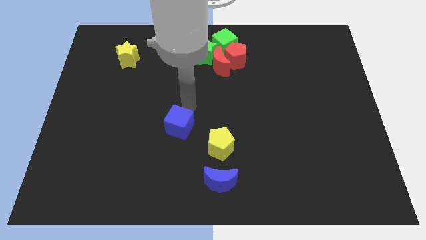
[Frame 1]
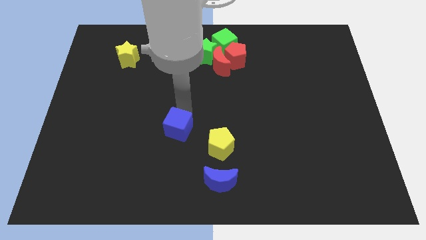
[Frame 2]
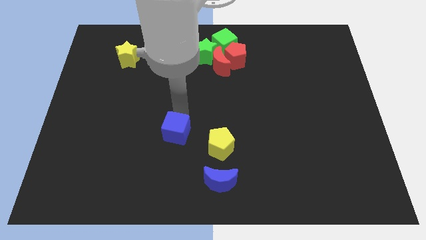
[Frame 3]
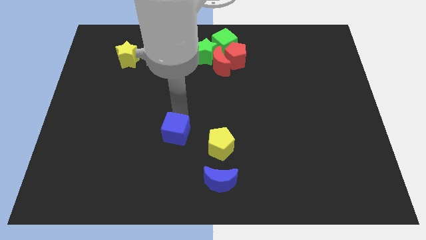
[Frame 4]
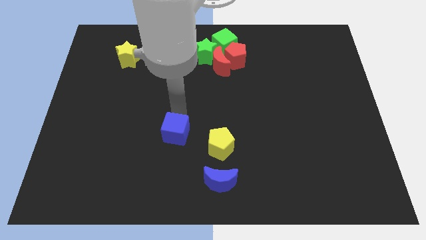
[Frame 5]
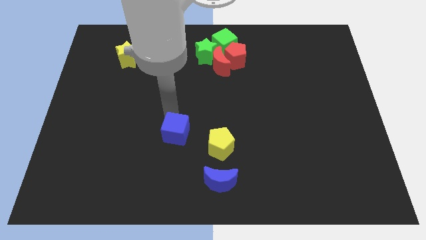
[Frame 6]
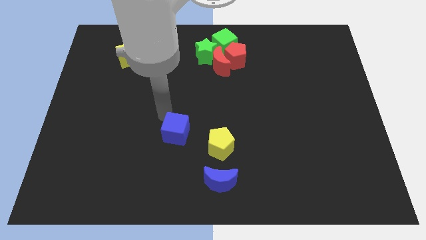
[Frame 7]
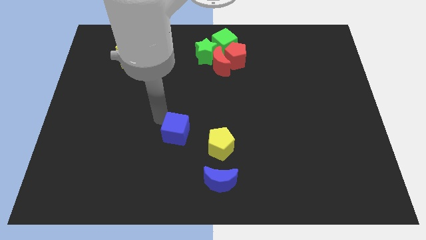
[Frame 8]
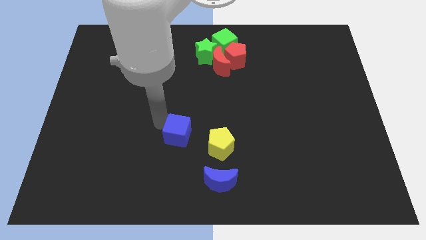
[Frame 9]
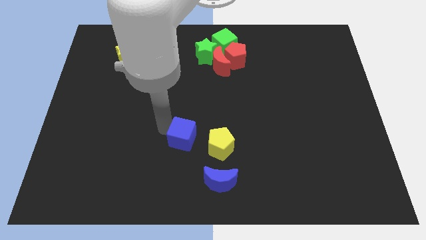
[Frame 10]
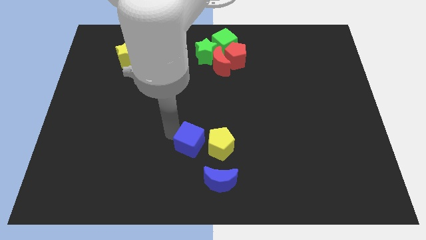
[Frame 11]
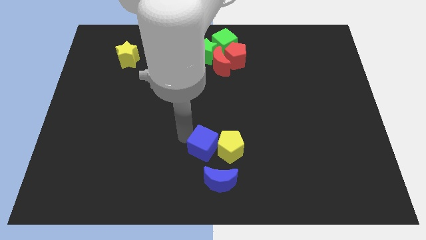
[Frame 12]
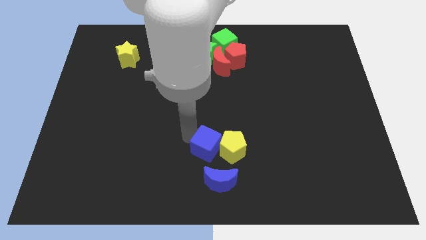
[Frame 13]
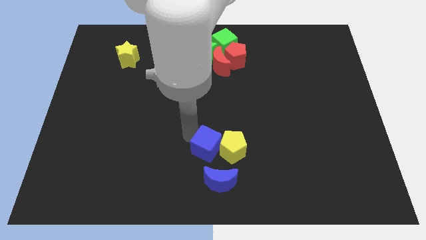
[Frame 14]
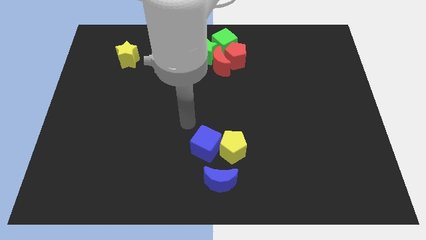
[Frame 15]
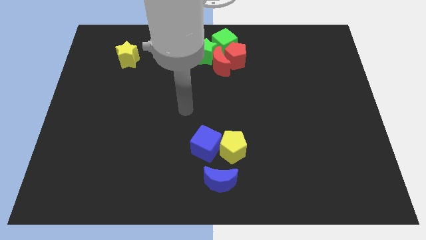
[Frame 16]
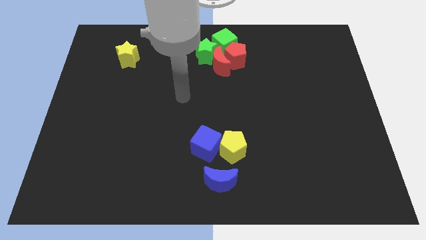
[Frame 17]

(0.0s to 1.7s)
move the blue cube into the yellow pentagon

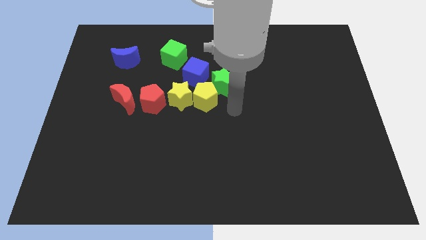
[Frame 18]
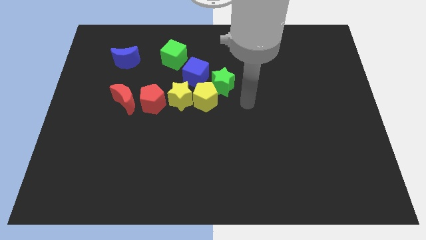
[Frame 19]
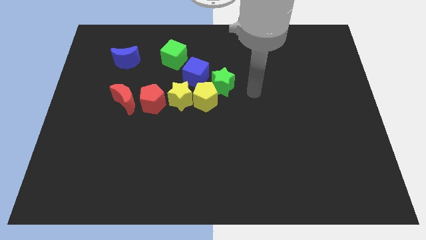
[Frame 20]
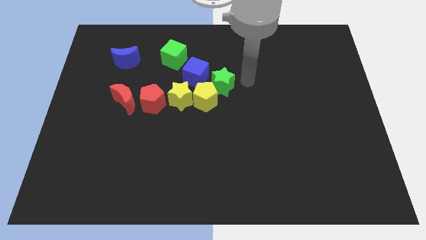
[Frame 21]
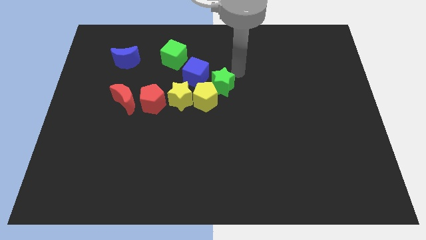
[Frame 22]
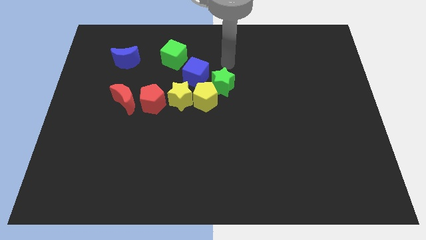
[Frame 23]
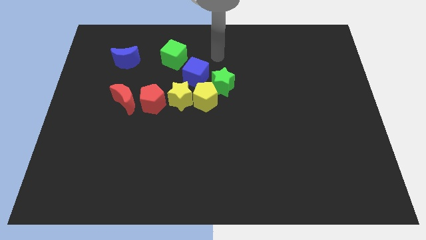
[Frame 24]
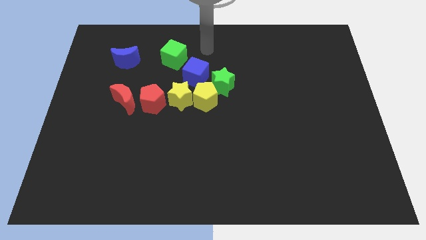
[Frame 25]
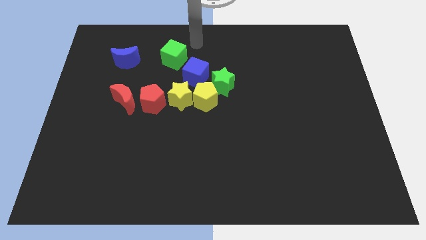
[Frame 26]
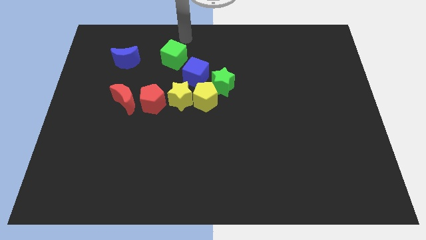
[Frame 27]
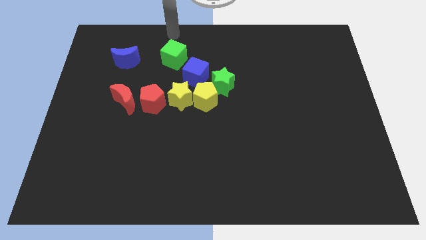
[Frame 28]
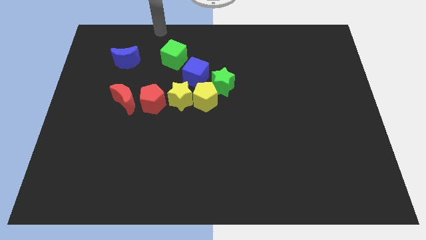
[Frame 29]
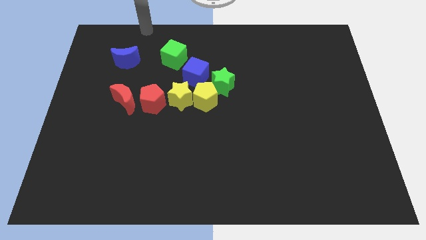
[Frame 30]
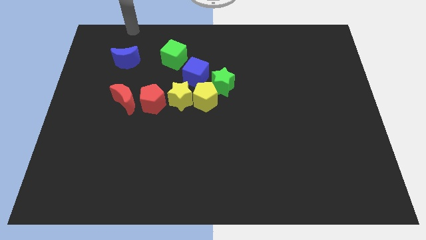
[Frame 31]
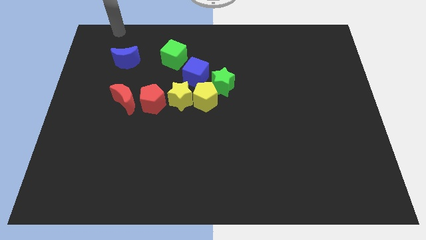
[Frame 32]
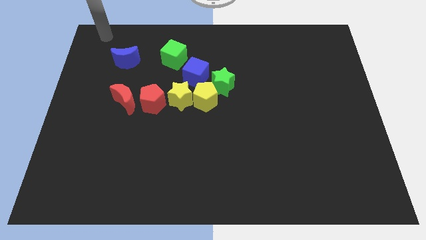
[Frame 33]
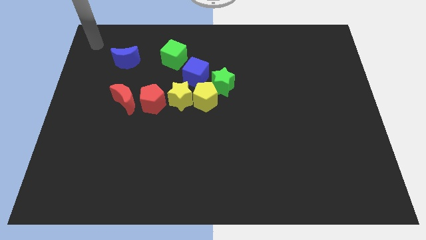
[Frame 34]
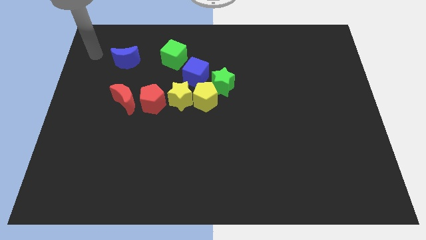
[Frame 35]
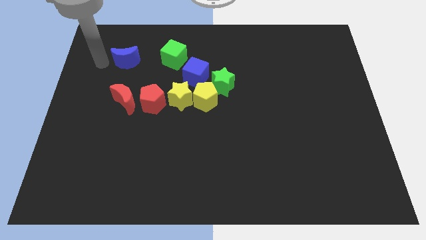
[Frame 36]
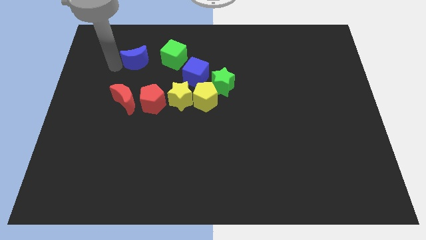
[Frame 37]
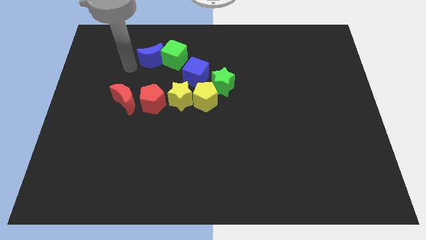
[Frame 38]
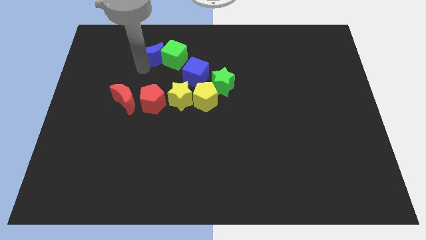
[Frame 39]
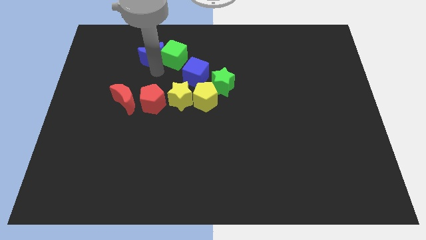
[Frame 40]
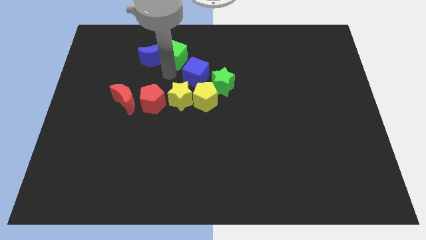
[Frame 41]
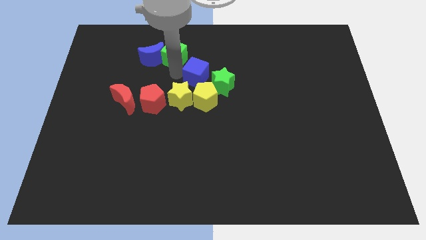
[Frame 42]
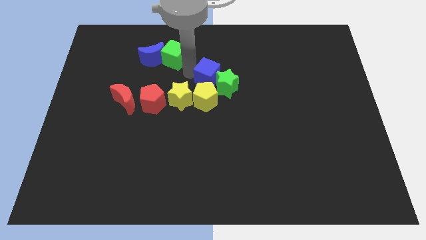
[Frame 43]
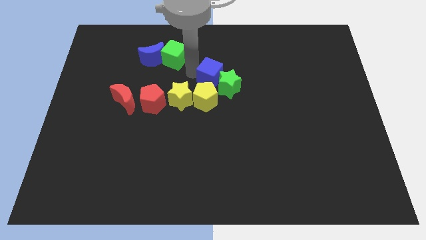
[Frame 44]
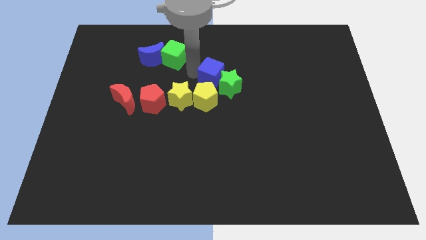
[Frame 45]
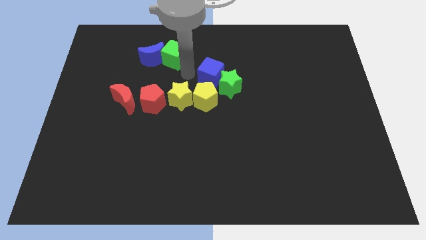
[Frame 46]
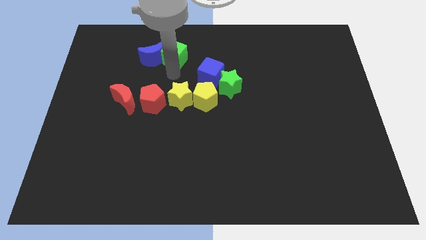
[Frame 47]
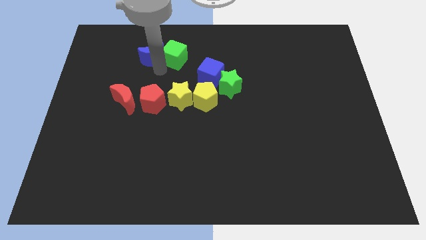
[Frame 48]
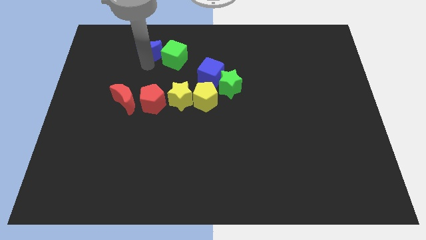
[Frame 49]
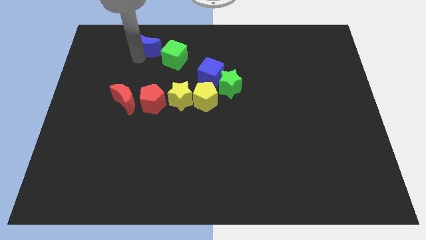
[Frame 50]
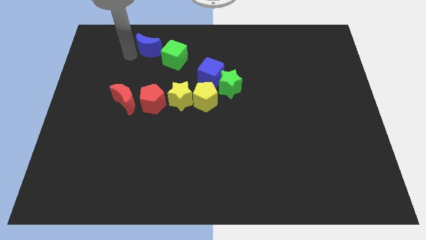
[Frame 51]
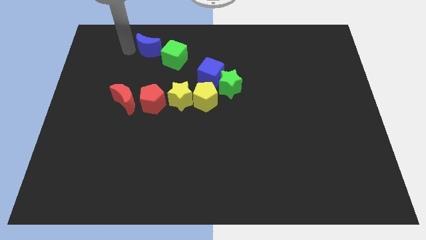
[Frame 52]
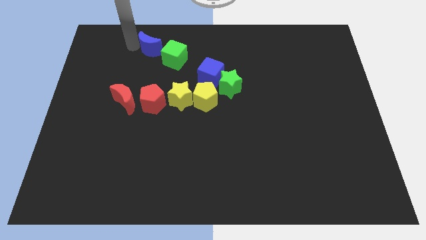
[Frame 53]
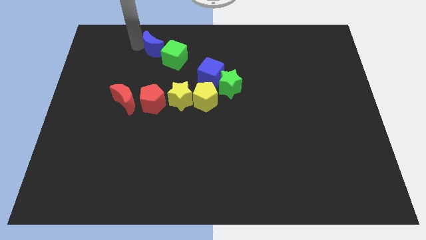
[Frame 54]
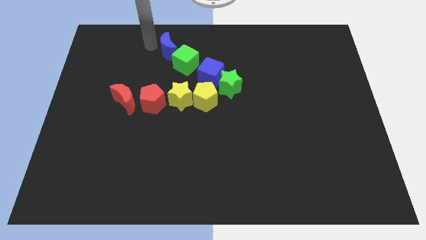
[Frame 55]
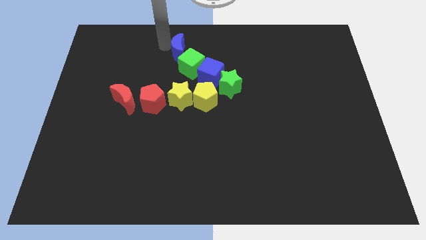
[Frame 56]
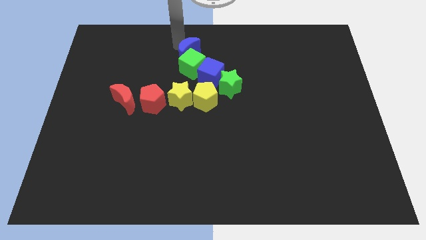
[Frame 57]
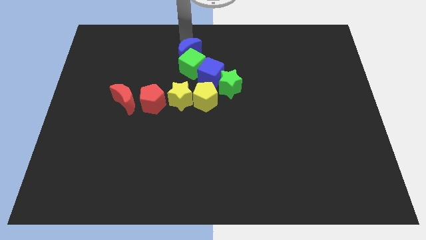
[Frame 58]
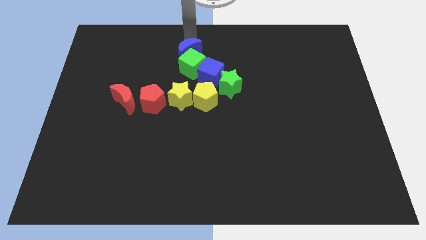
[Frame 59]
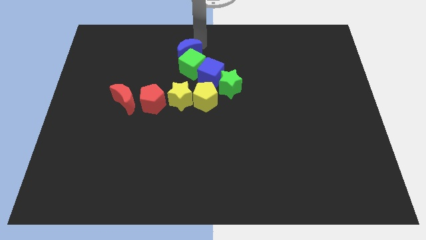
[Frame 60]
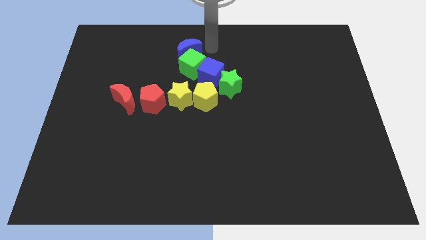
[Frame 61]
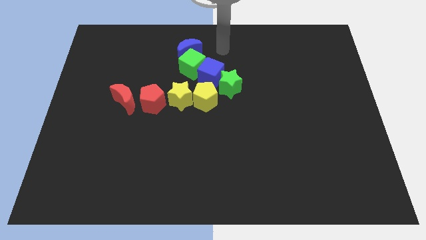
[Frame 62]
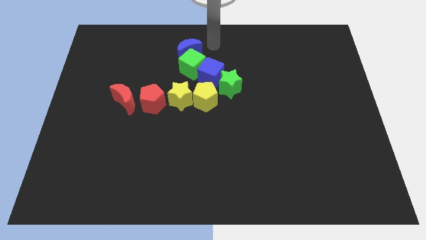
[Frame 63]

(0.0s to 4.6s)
move the group of blocks towards the center of the board

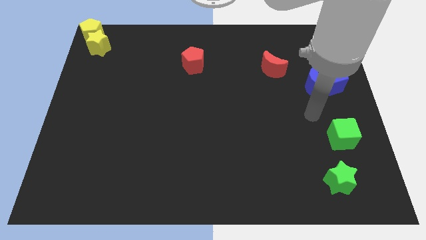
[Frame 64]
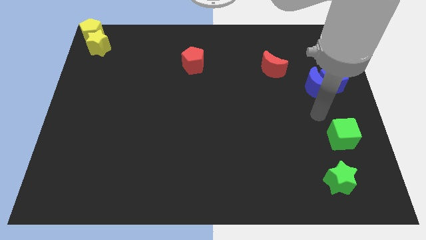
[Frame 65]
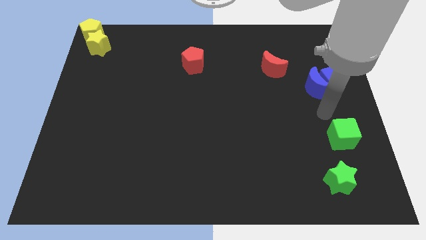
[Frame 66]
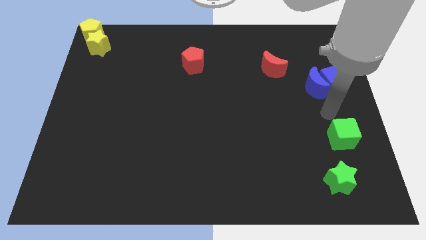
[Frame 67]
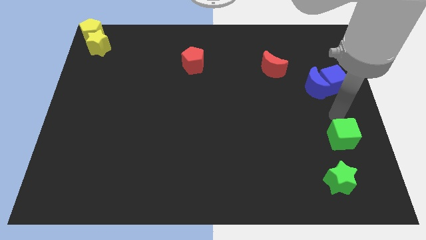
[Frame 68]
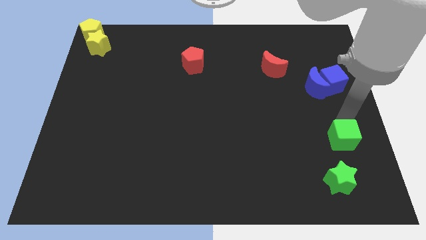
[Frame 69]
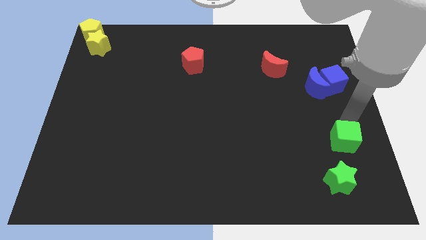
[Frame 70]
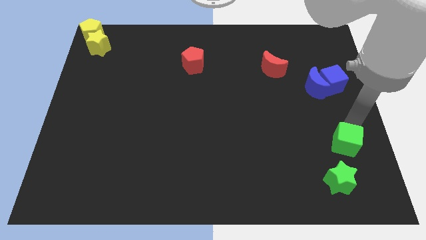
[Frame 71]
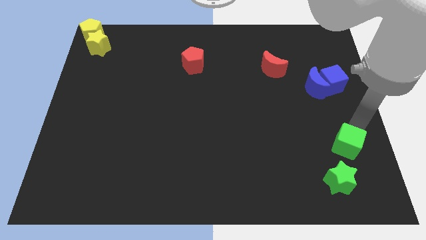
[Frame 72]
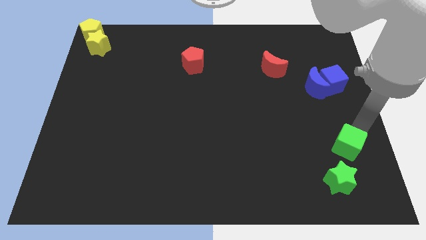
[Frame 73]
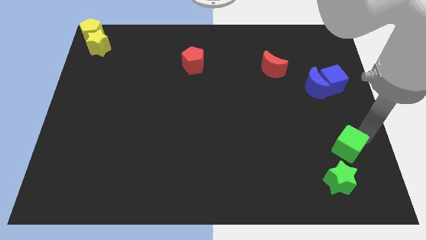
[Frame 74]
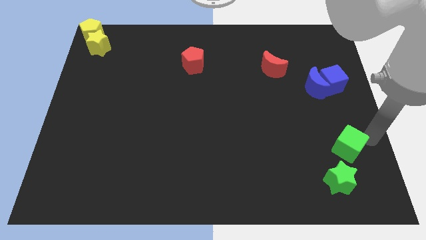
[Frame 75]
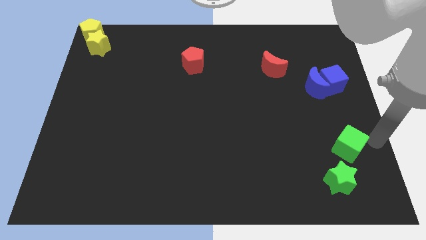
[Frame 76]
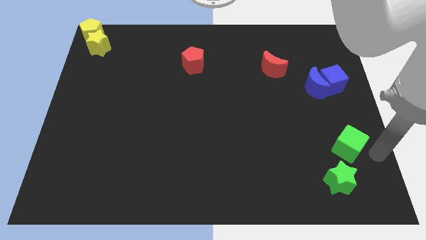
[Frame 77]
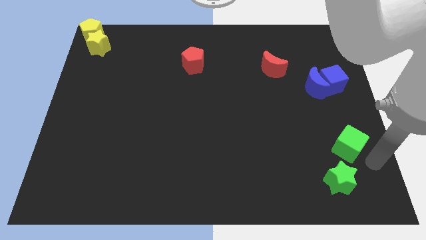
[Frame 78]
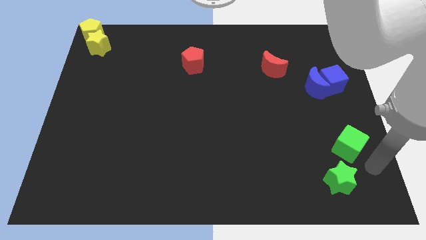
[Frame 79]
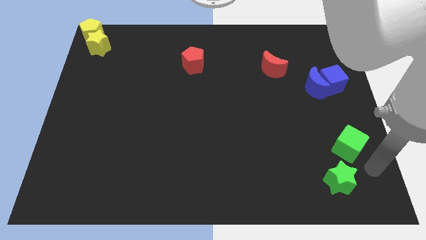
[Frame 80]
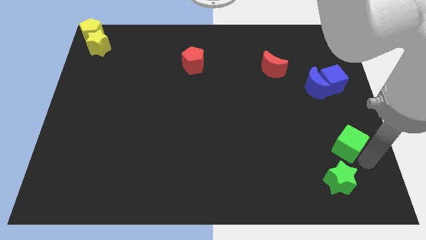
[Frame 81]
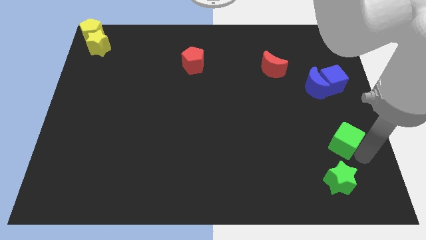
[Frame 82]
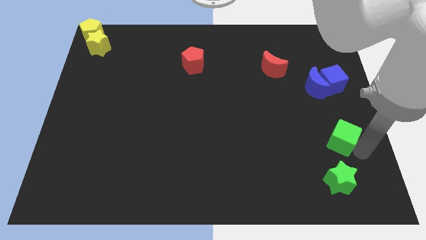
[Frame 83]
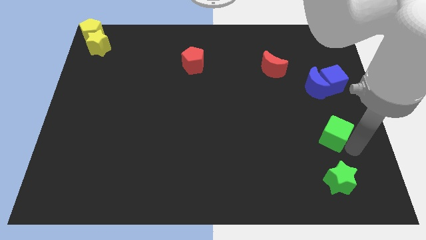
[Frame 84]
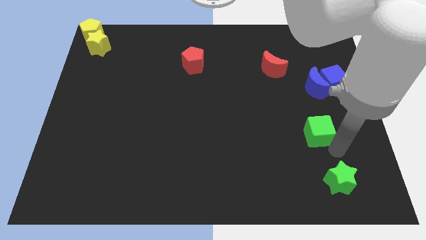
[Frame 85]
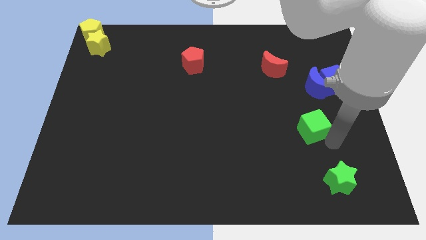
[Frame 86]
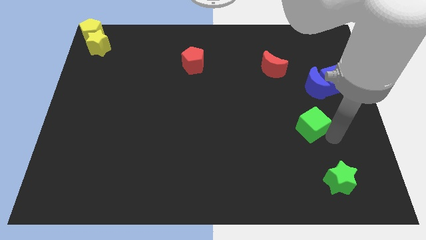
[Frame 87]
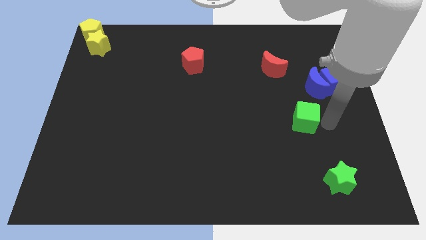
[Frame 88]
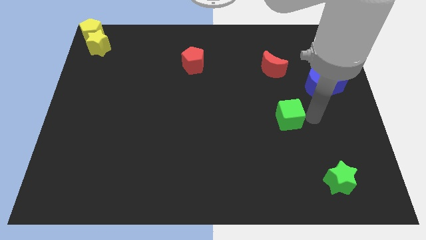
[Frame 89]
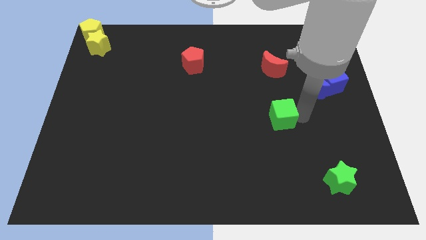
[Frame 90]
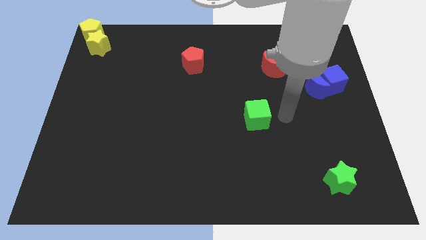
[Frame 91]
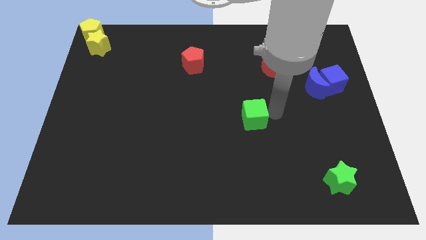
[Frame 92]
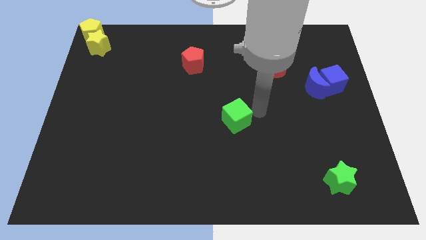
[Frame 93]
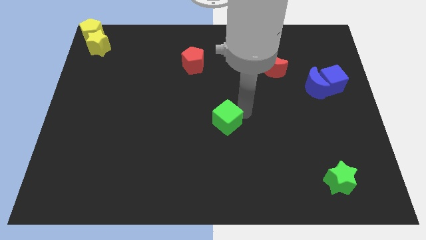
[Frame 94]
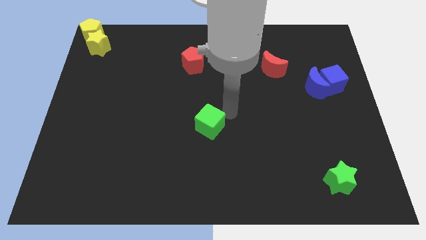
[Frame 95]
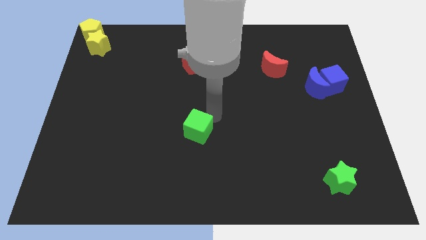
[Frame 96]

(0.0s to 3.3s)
push the green cube to the center of the board
